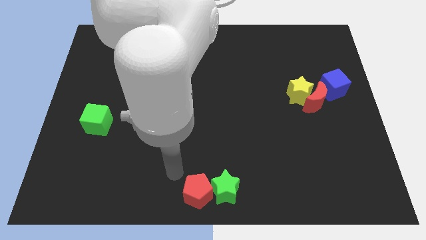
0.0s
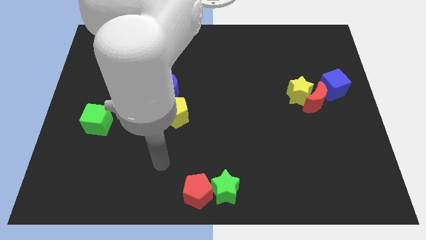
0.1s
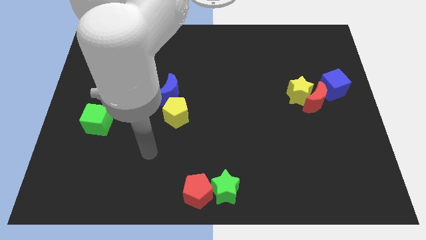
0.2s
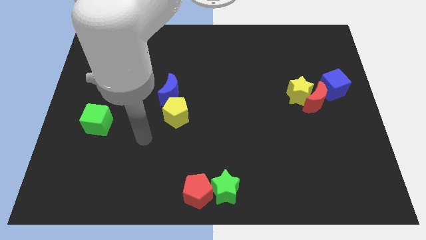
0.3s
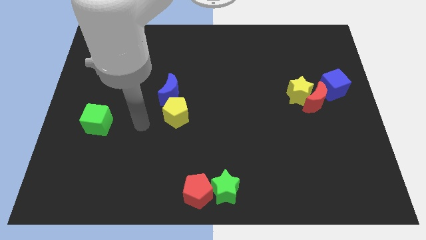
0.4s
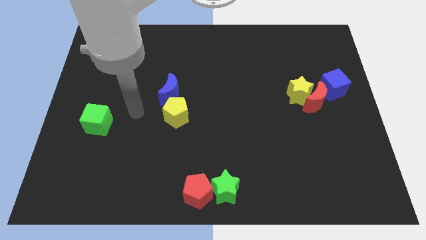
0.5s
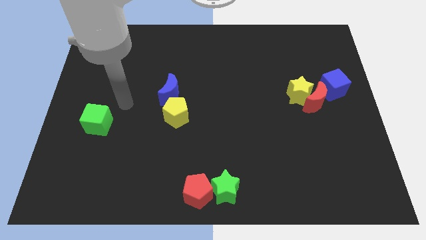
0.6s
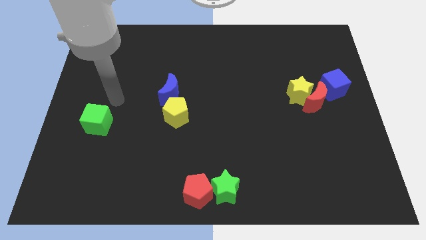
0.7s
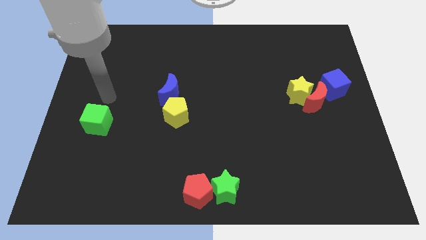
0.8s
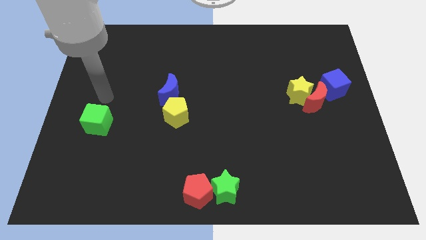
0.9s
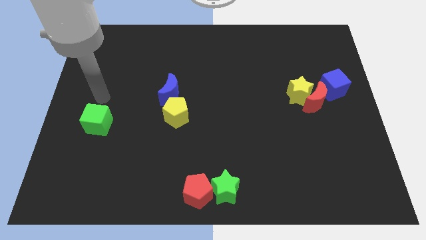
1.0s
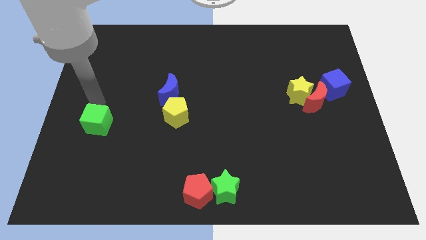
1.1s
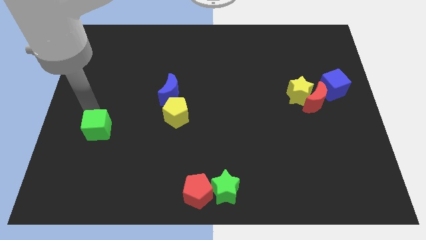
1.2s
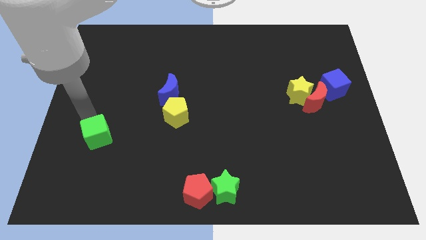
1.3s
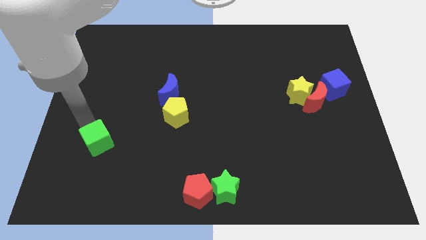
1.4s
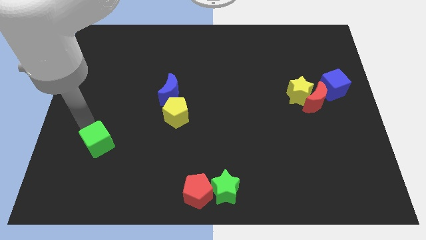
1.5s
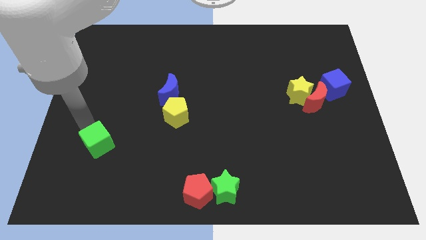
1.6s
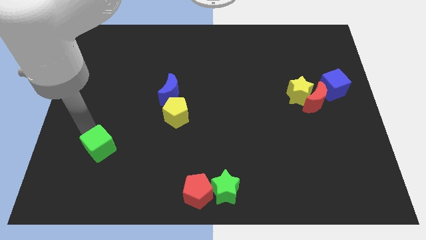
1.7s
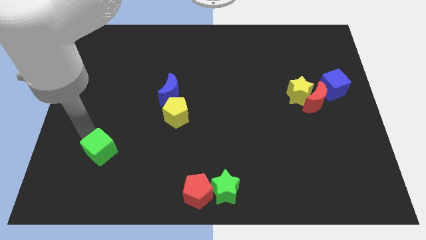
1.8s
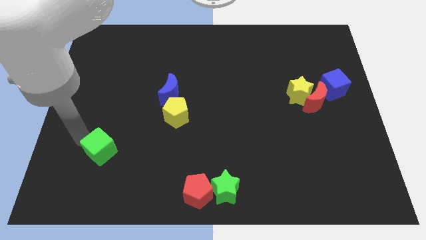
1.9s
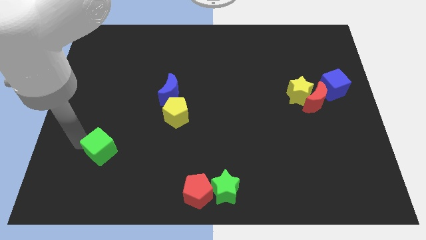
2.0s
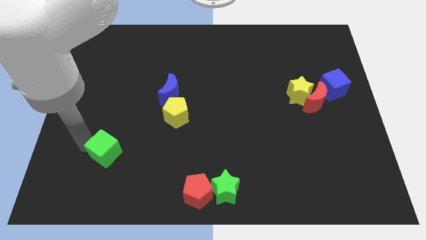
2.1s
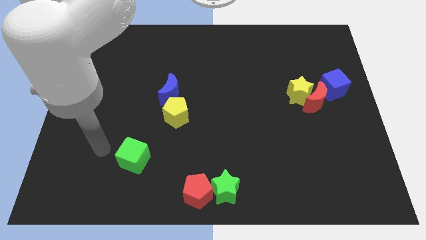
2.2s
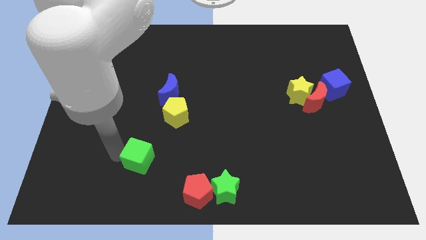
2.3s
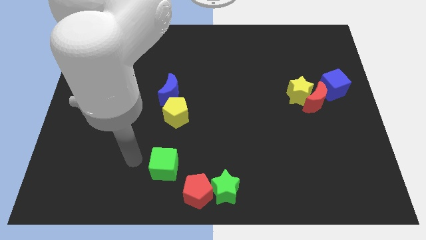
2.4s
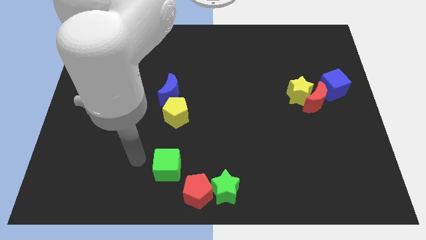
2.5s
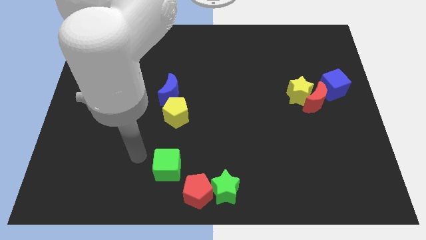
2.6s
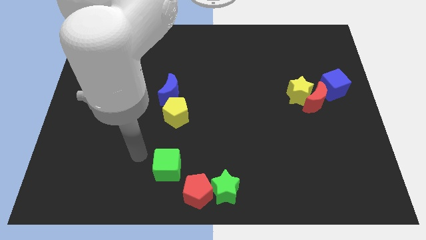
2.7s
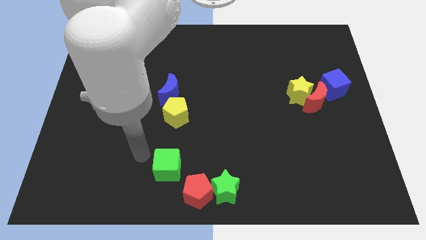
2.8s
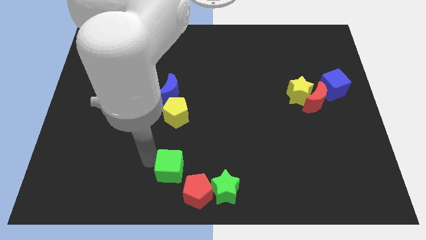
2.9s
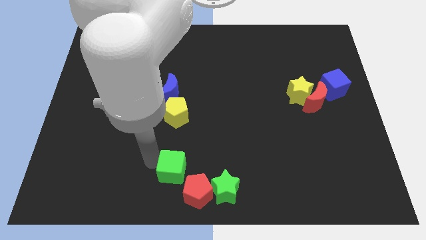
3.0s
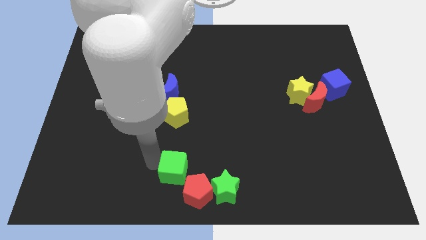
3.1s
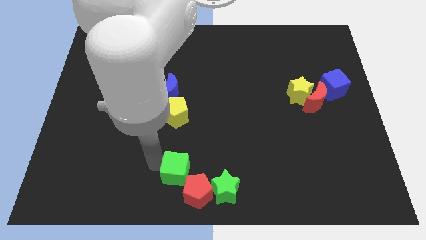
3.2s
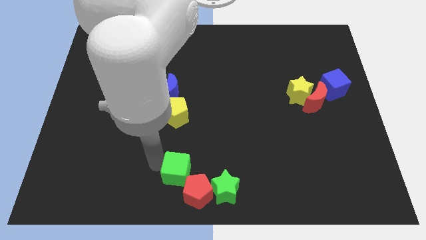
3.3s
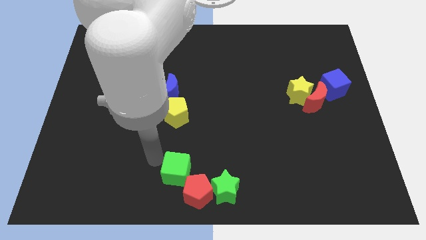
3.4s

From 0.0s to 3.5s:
move the green cube diagonally top left to red pentagon

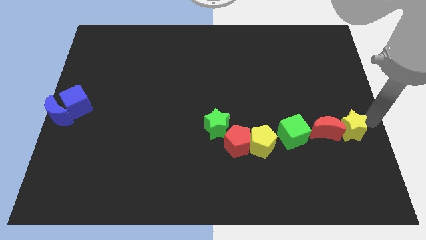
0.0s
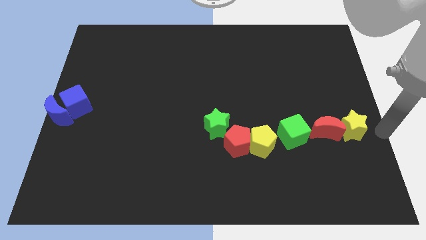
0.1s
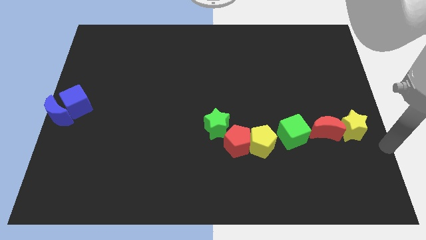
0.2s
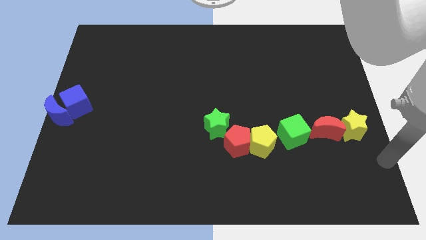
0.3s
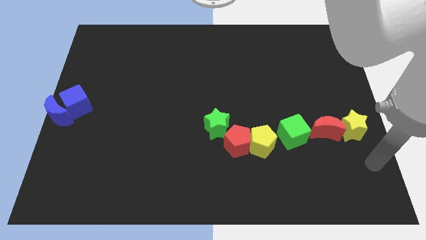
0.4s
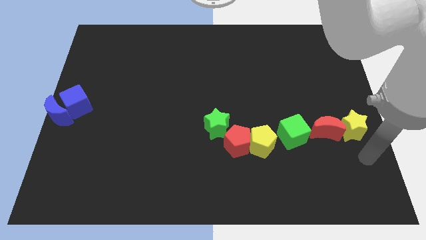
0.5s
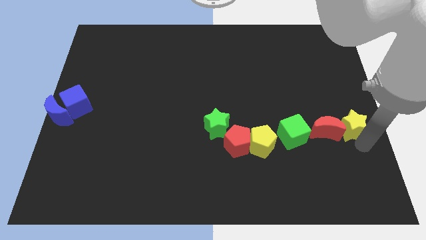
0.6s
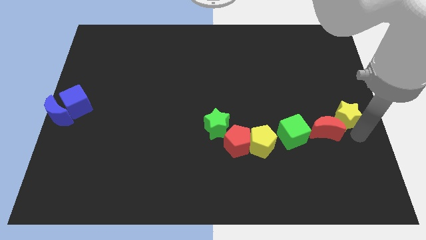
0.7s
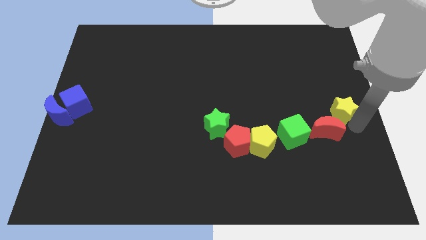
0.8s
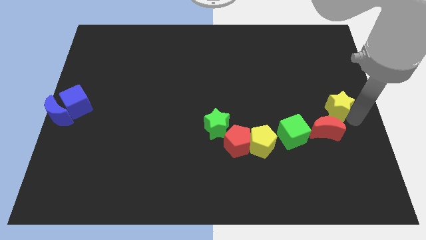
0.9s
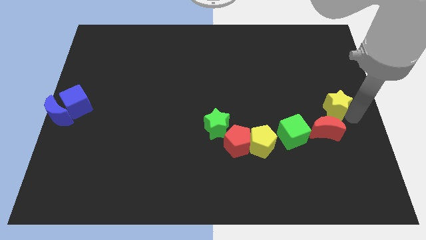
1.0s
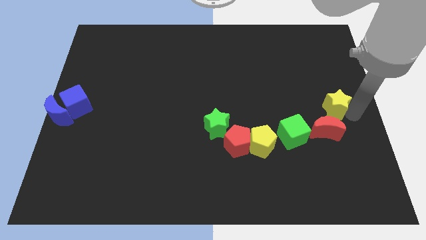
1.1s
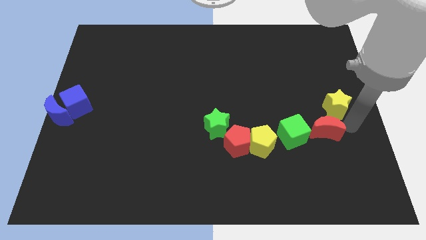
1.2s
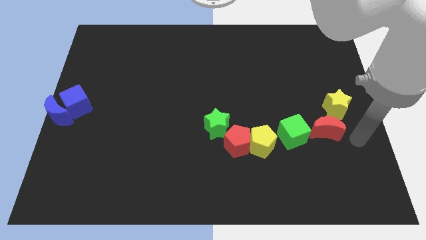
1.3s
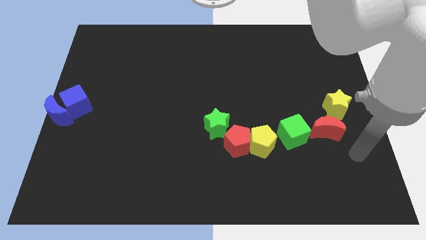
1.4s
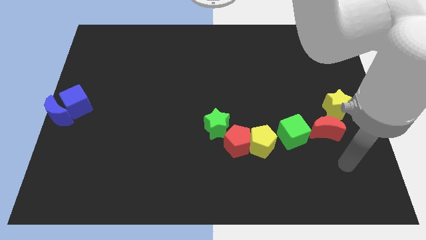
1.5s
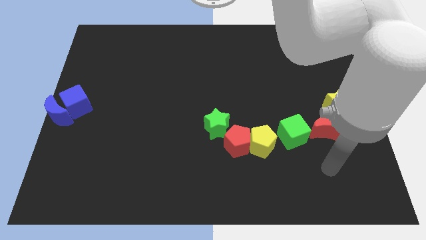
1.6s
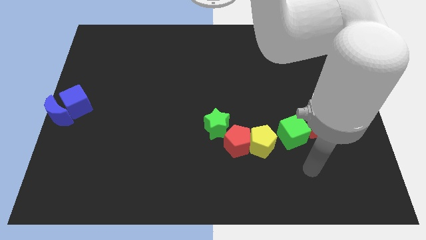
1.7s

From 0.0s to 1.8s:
move the yellow star slightly to the top of the board

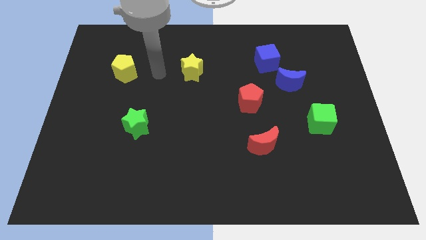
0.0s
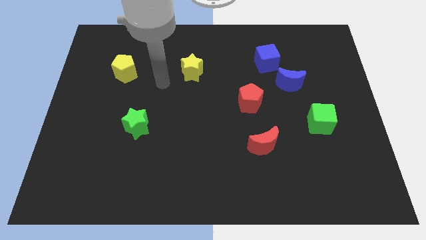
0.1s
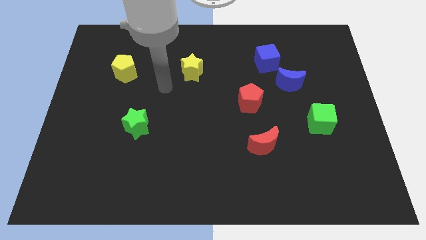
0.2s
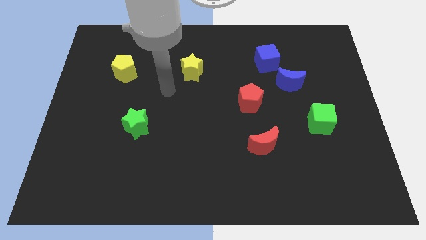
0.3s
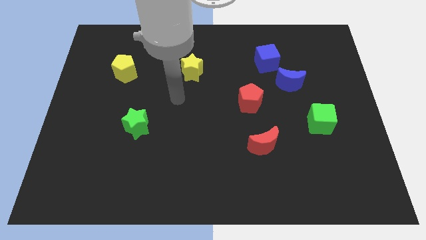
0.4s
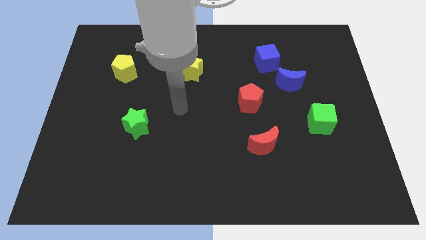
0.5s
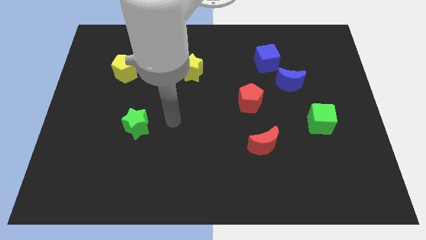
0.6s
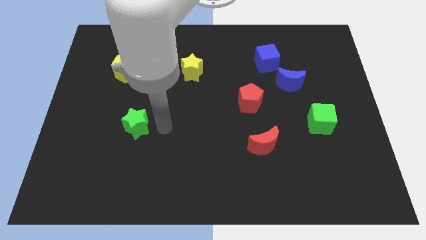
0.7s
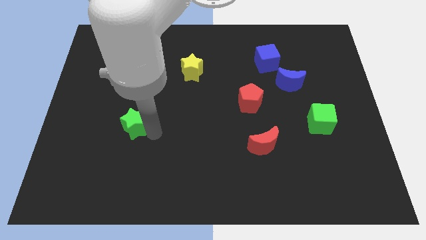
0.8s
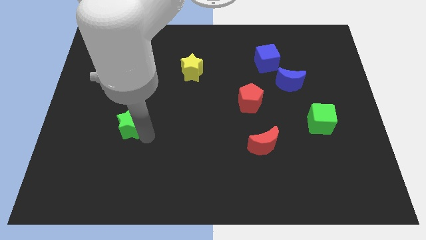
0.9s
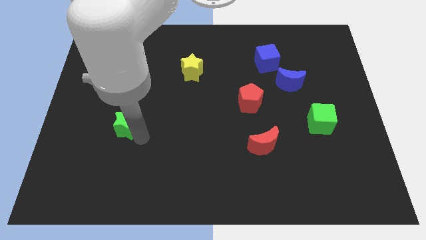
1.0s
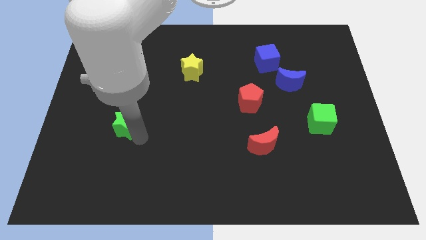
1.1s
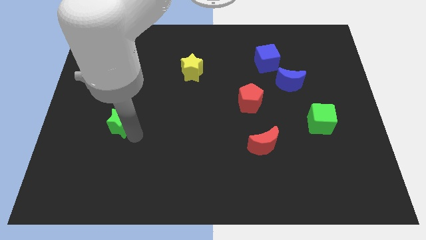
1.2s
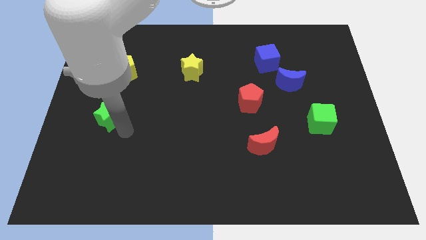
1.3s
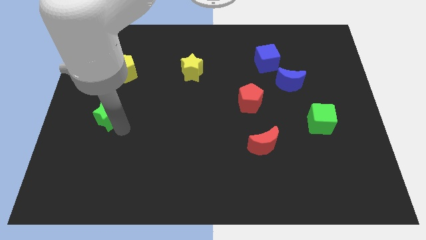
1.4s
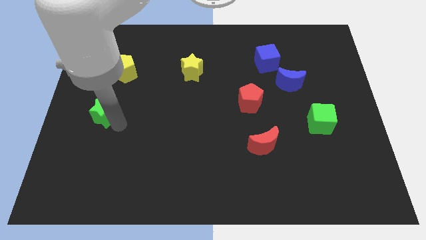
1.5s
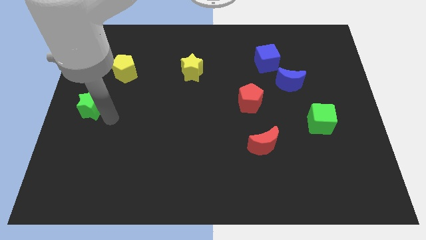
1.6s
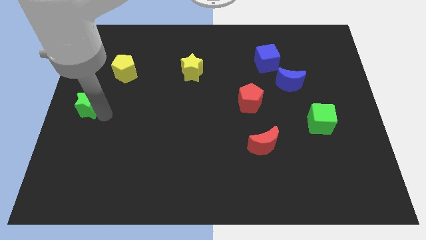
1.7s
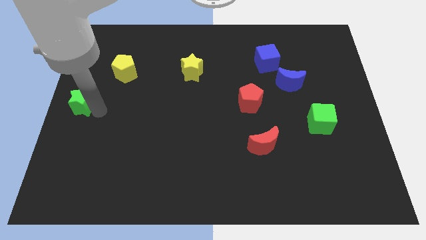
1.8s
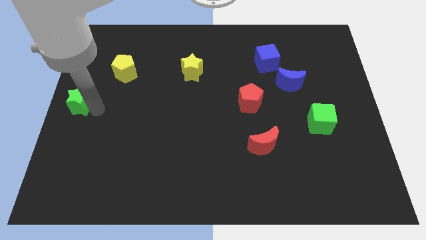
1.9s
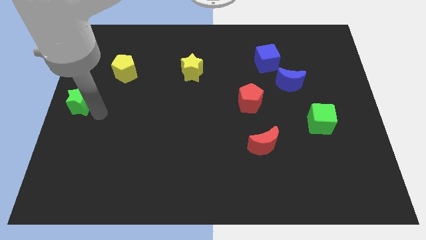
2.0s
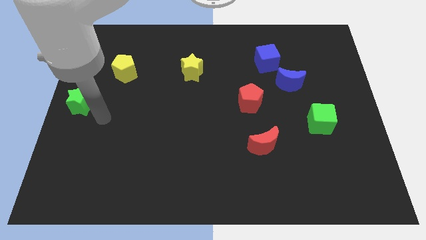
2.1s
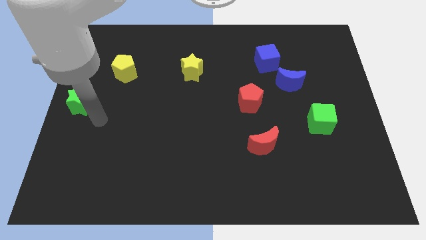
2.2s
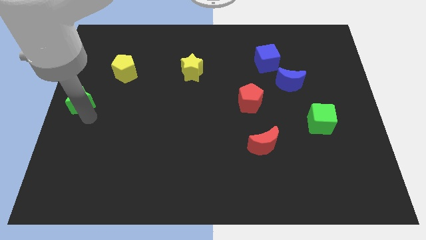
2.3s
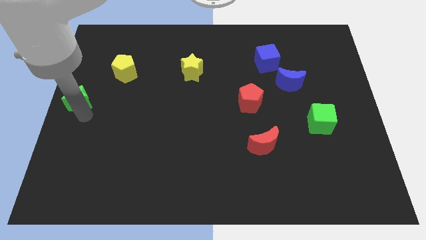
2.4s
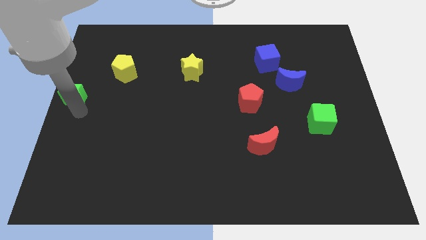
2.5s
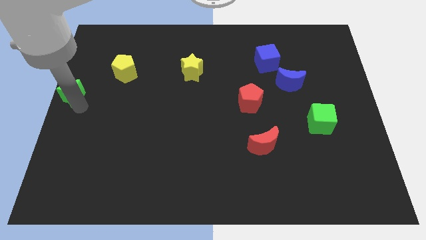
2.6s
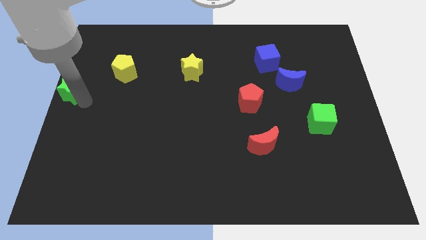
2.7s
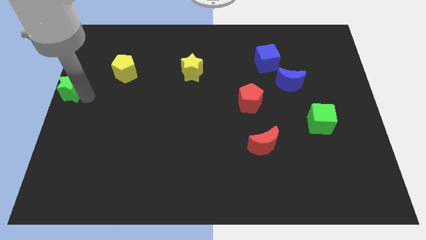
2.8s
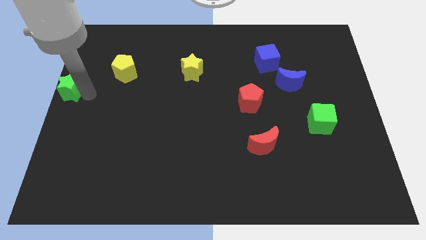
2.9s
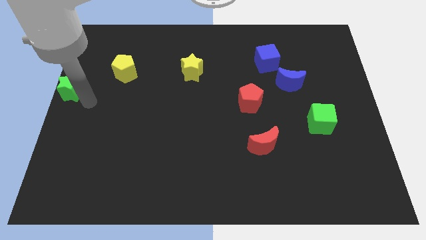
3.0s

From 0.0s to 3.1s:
push the green star to the bottom left of the yellow pentagon

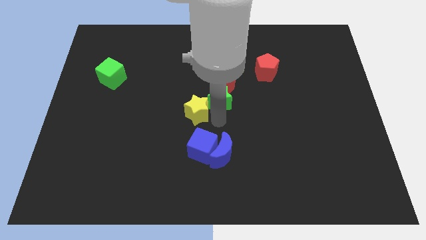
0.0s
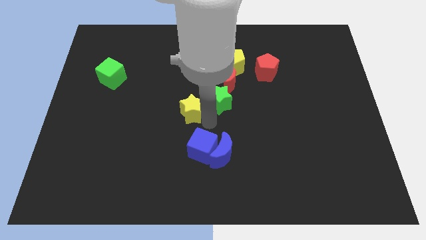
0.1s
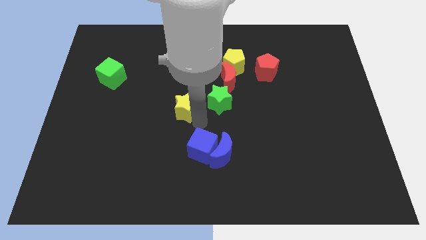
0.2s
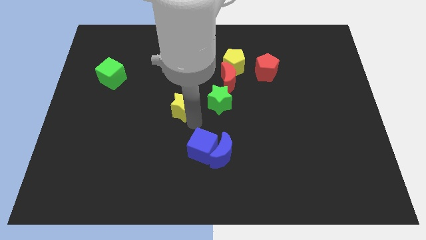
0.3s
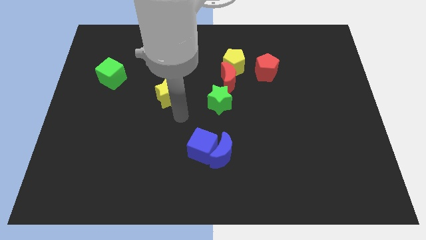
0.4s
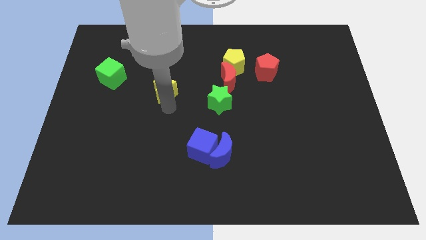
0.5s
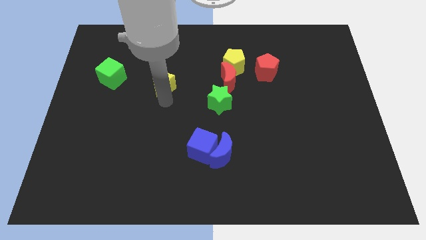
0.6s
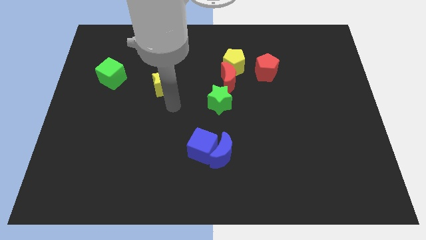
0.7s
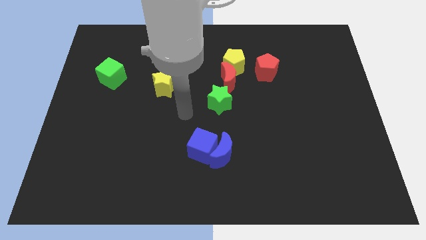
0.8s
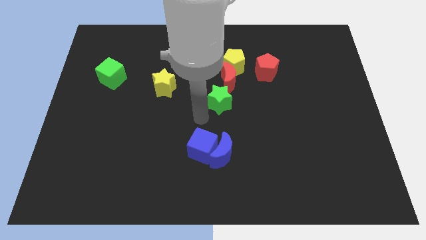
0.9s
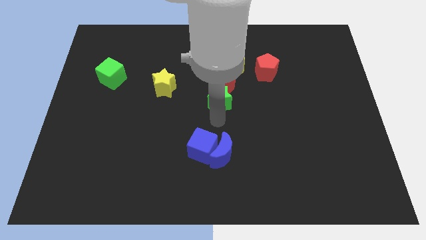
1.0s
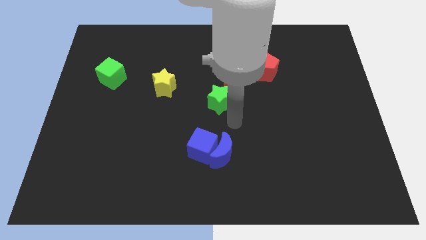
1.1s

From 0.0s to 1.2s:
move the yellow star away from the green star
